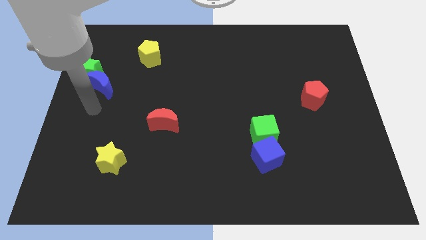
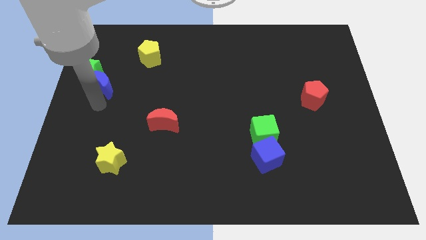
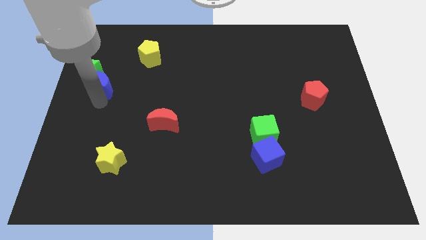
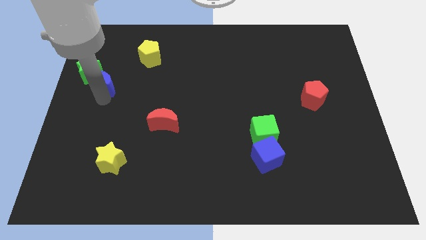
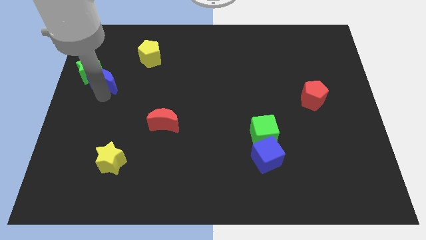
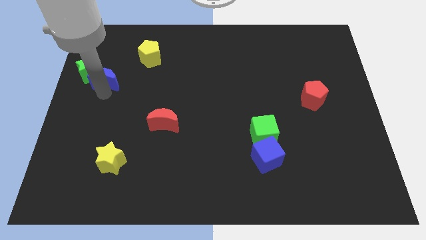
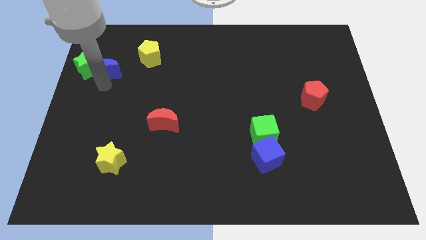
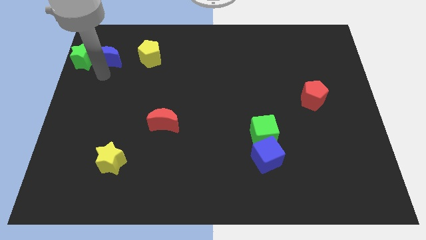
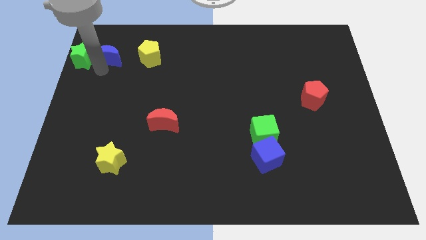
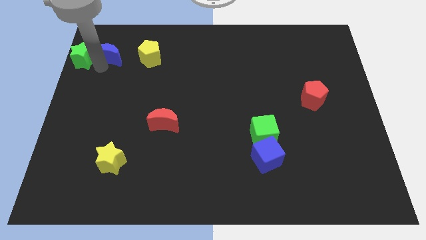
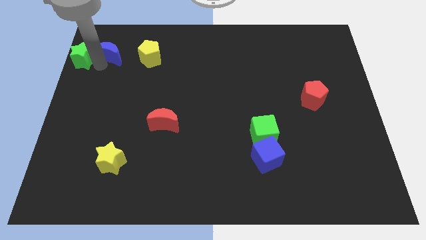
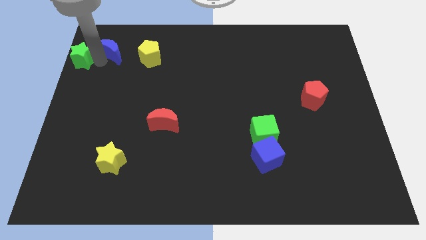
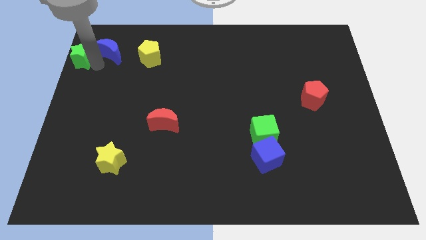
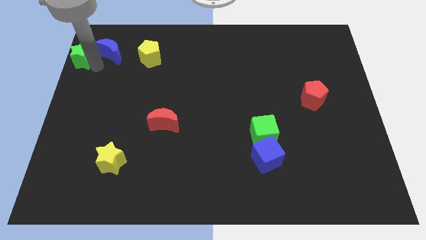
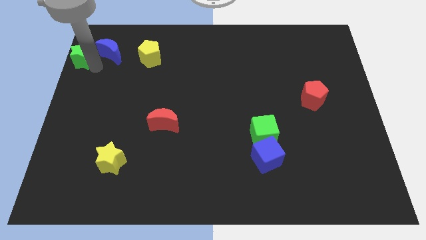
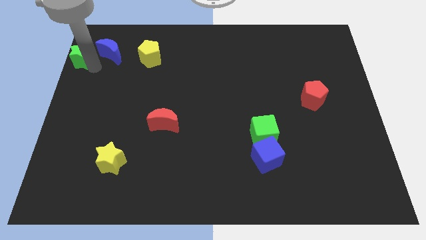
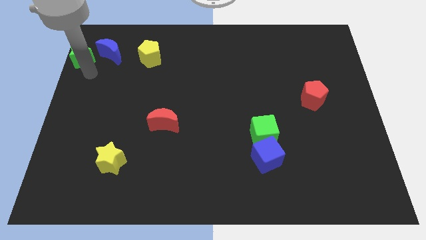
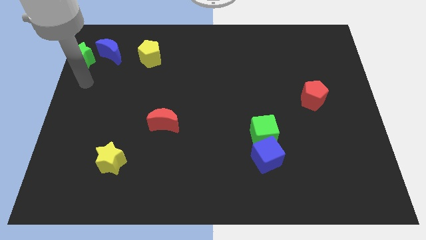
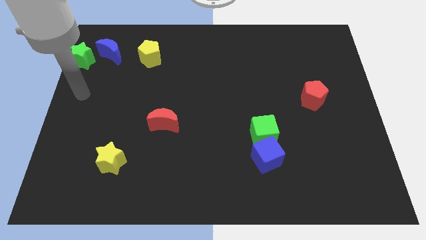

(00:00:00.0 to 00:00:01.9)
push the blue crescent towards the top left of the board

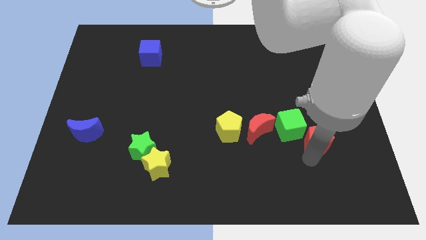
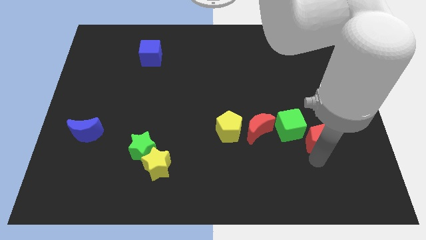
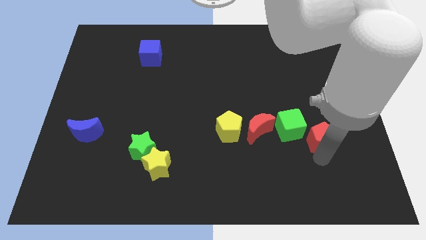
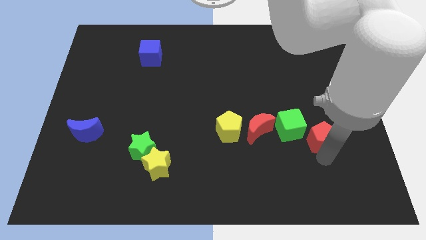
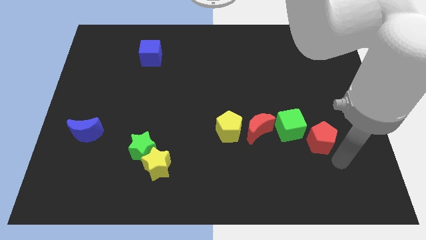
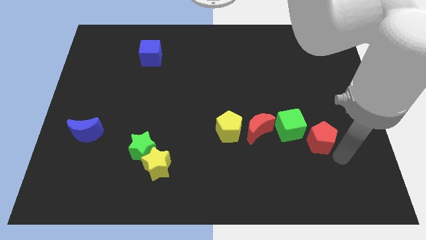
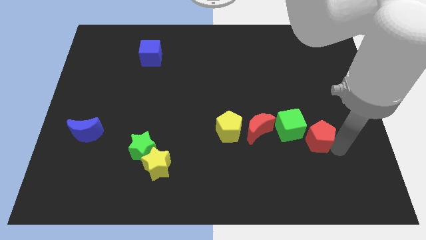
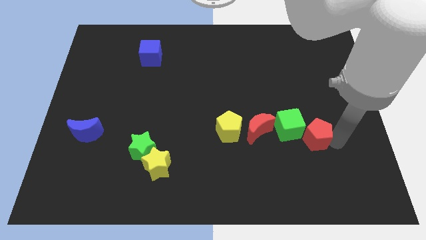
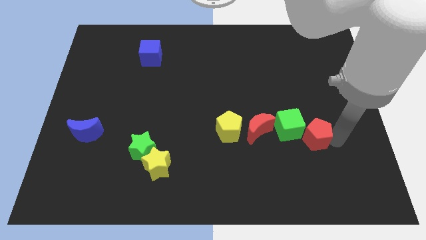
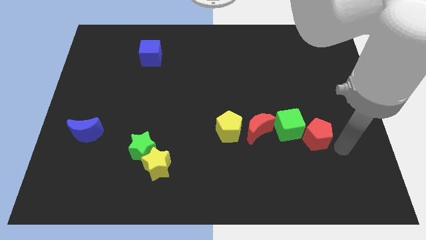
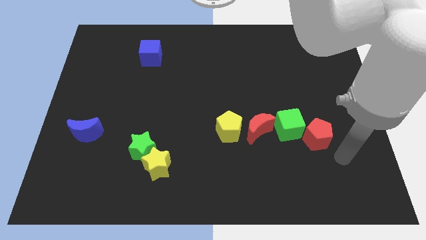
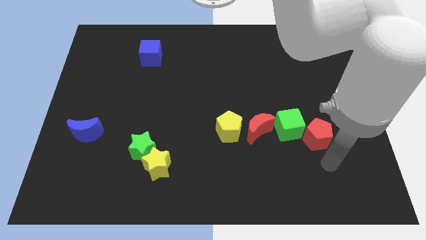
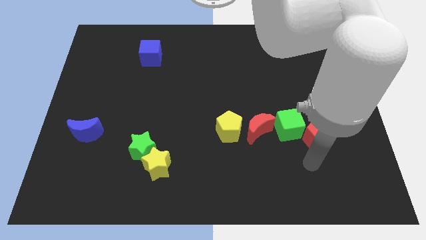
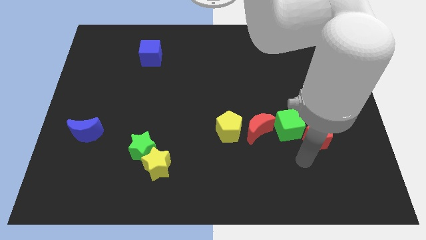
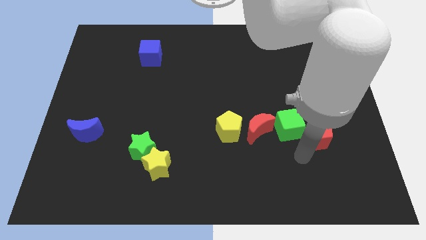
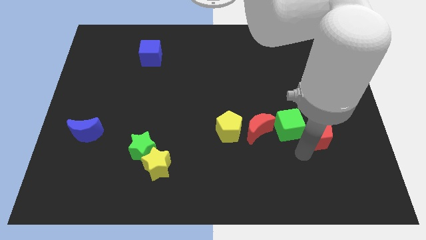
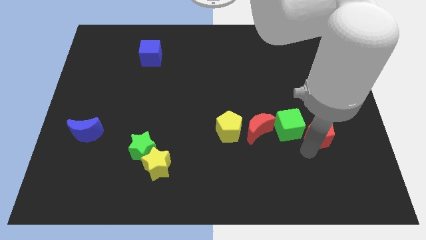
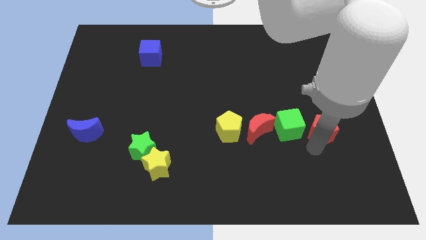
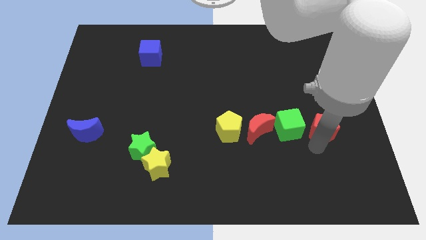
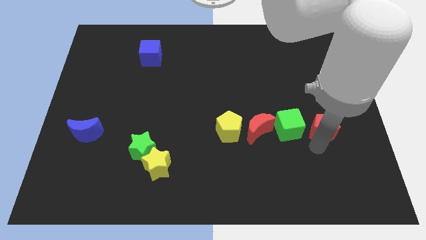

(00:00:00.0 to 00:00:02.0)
move the red pentagon parallel to the right side of the green cube

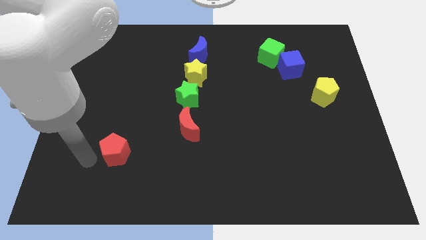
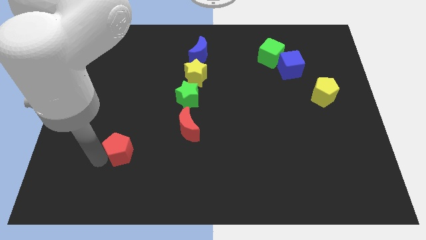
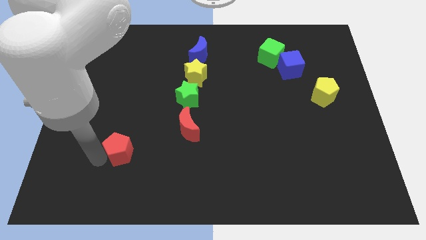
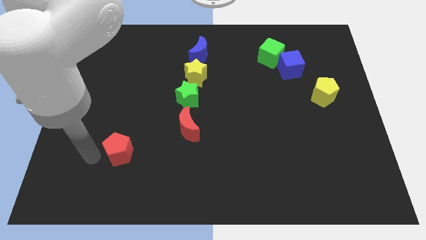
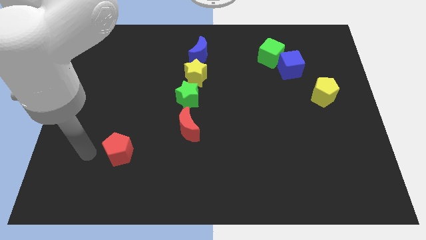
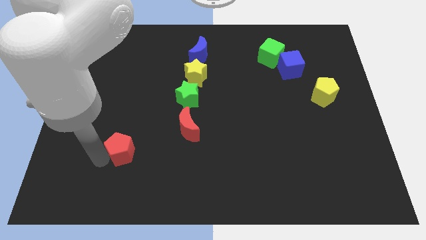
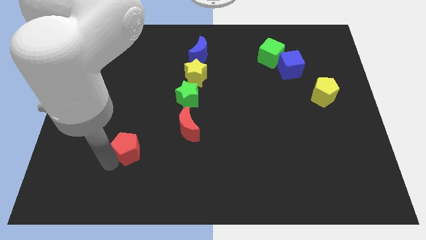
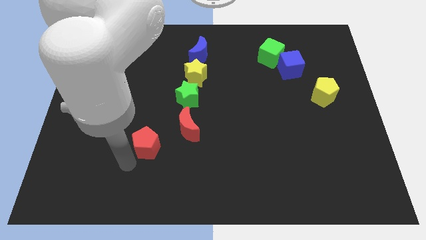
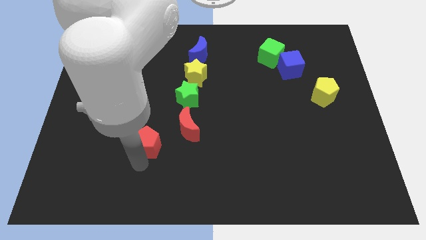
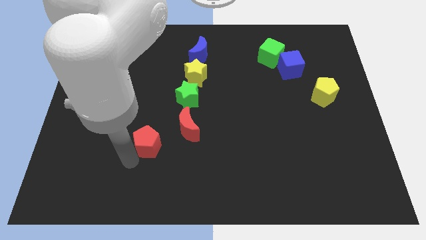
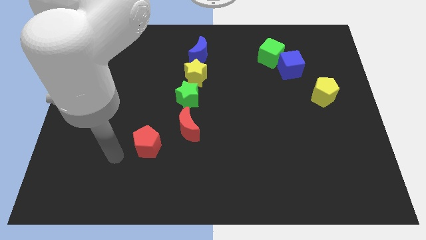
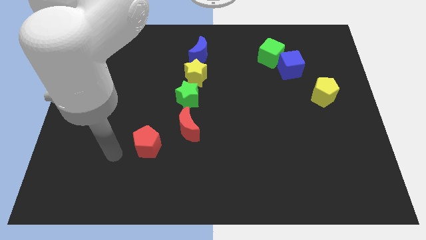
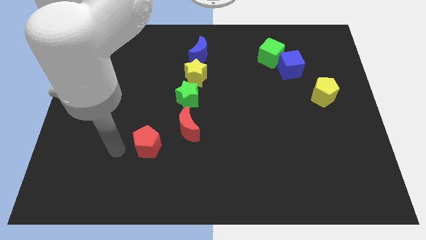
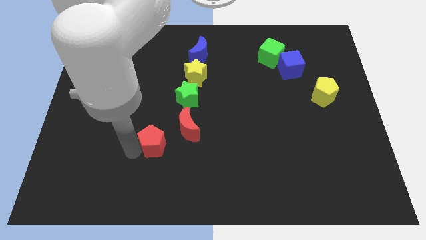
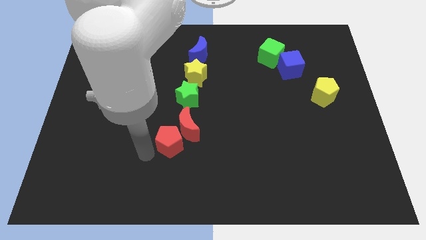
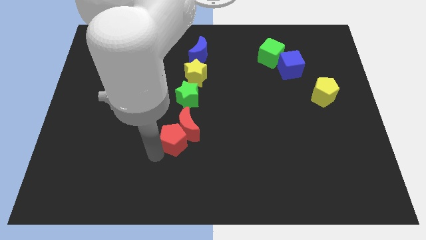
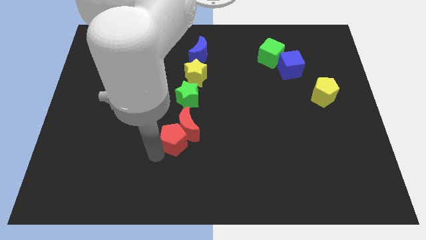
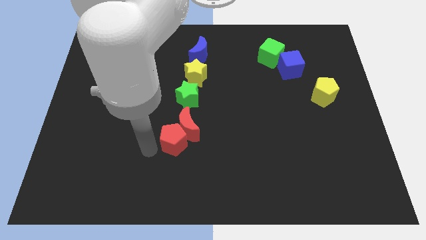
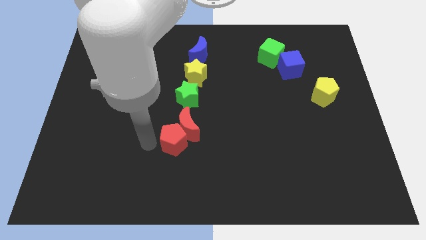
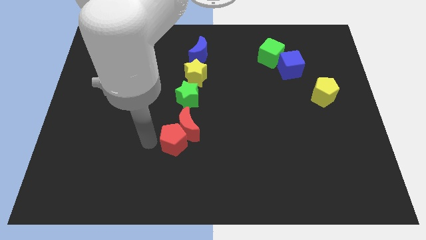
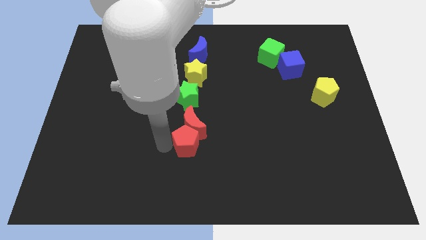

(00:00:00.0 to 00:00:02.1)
slide red pentagon into red crescent

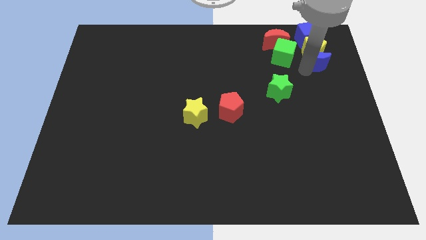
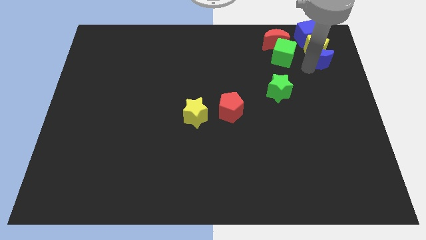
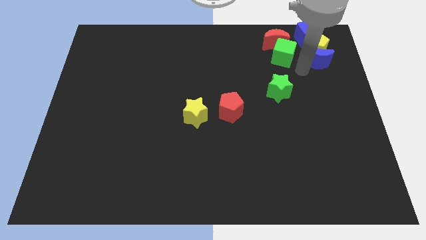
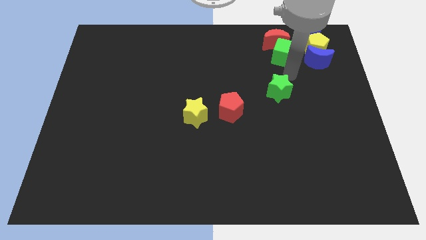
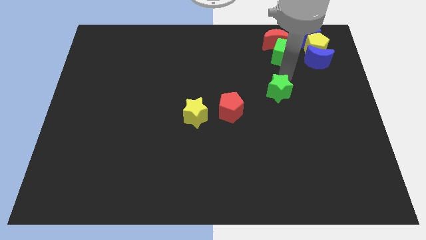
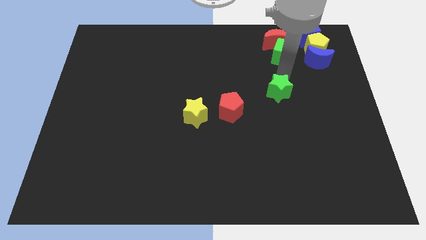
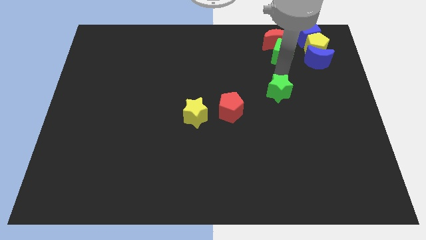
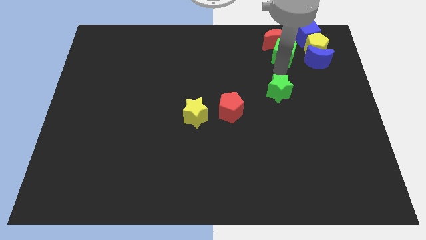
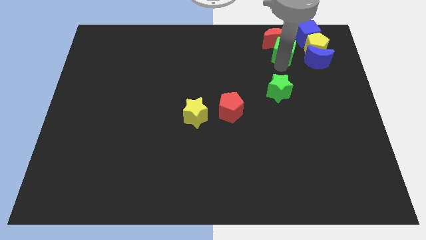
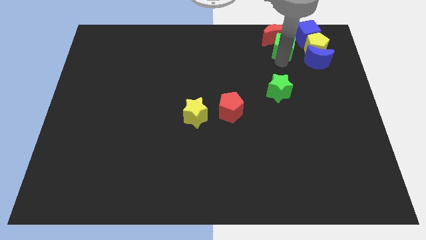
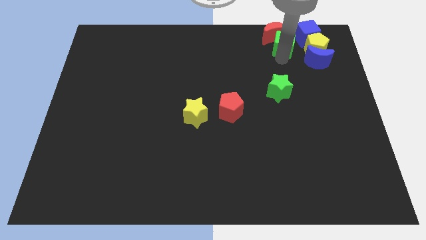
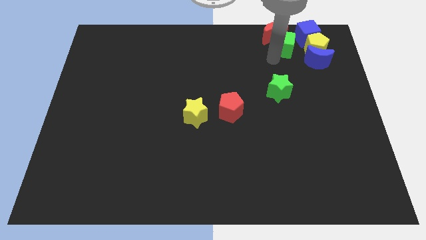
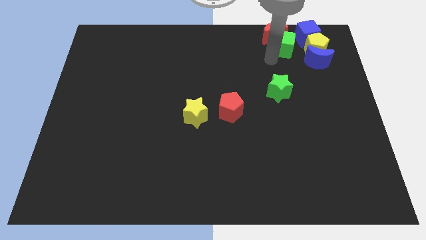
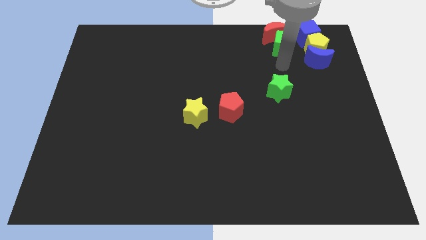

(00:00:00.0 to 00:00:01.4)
push the red moon and green cube towards the top side of the board

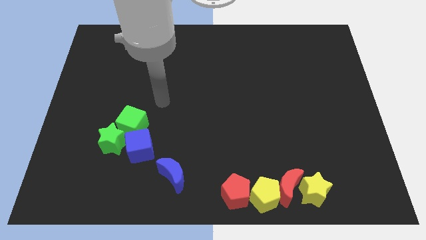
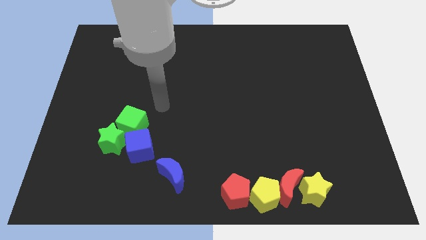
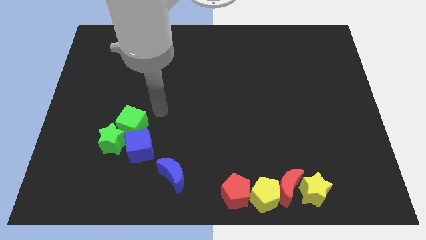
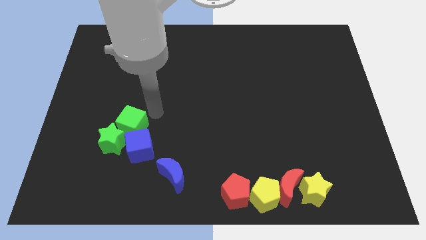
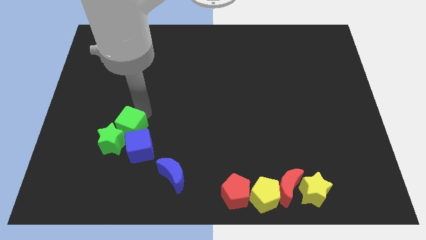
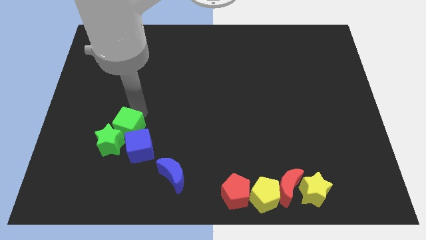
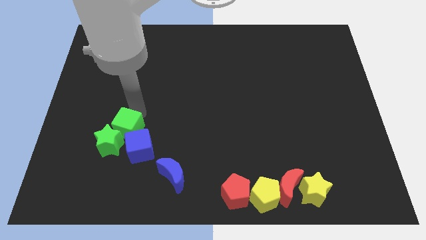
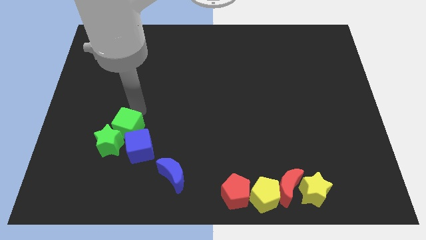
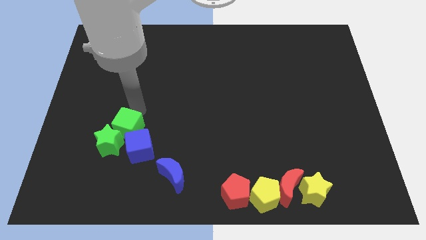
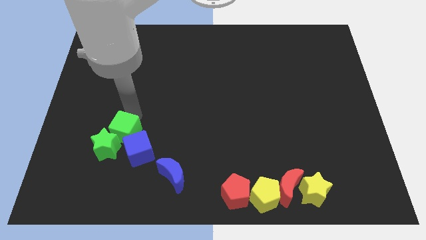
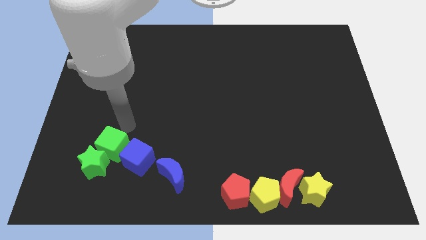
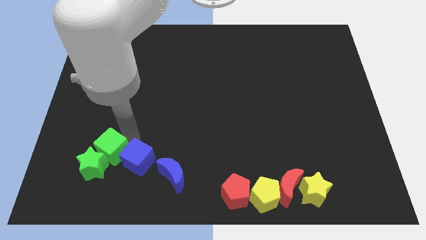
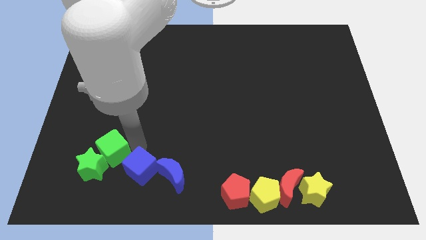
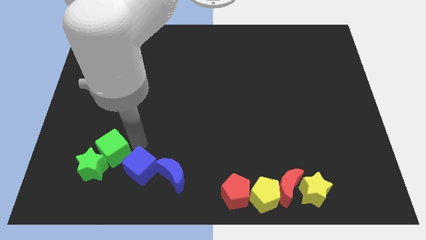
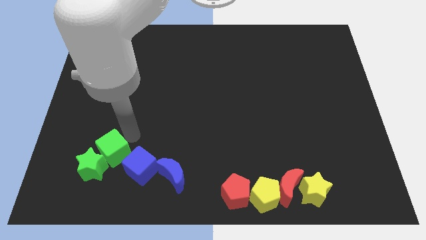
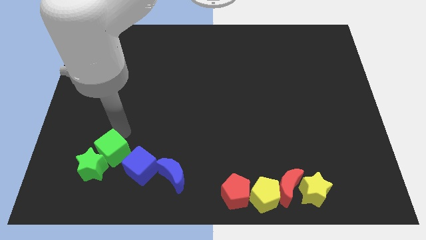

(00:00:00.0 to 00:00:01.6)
slightly push green cube with green star to the bottom left
